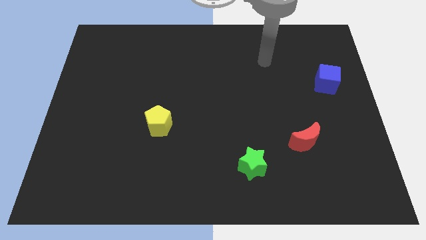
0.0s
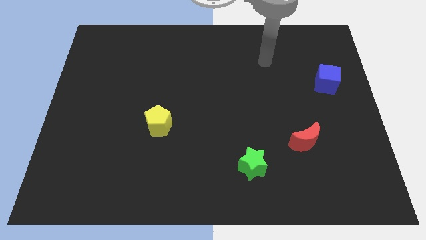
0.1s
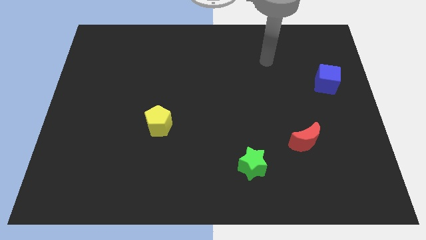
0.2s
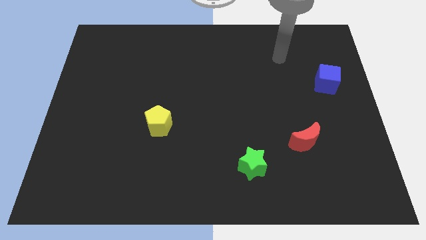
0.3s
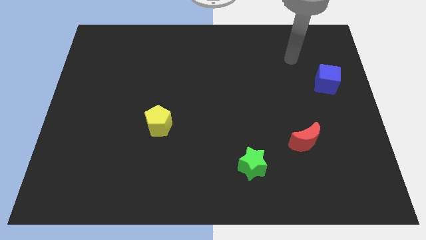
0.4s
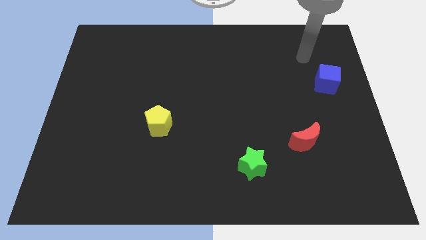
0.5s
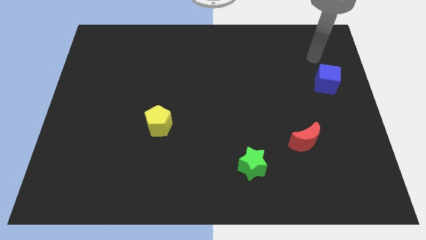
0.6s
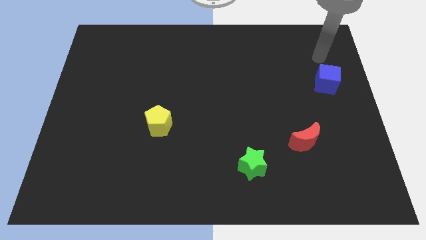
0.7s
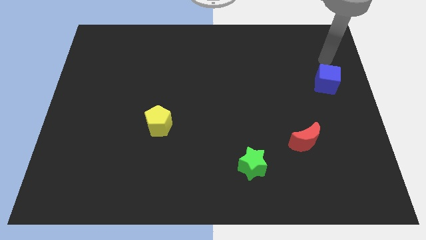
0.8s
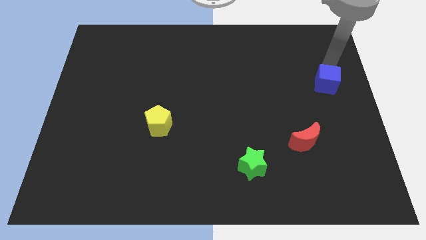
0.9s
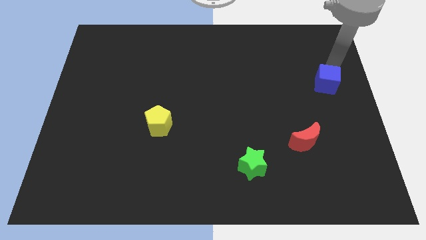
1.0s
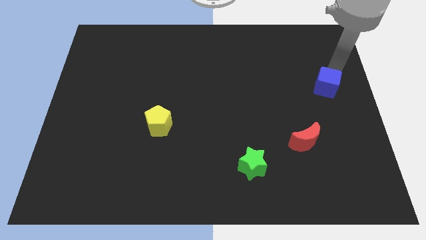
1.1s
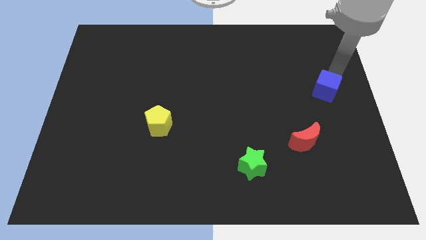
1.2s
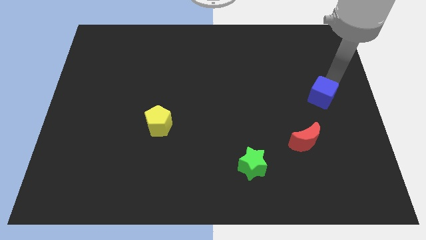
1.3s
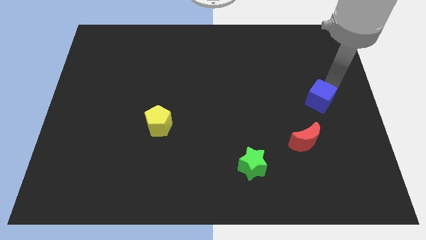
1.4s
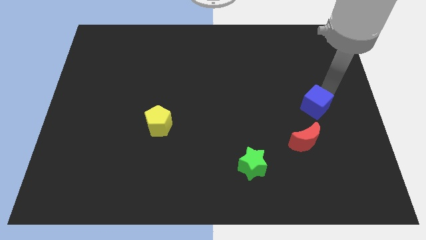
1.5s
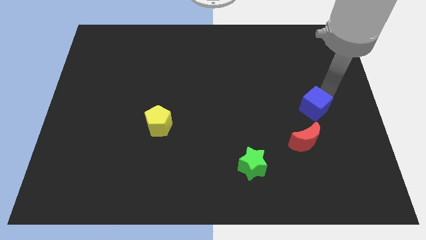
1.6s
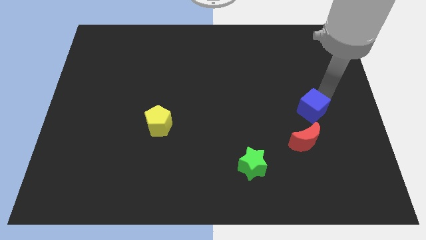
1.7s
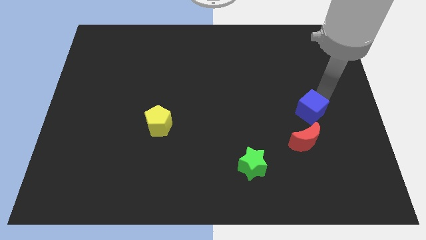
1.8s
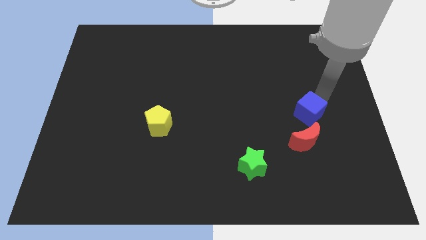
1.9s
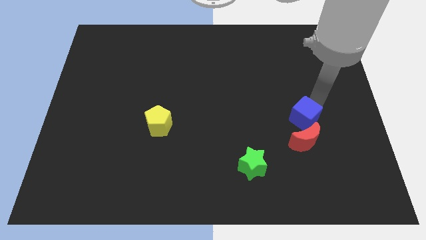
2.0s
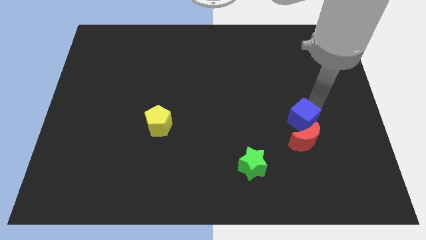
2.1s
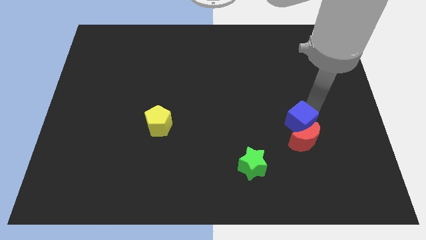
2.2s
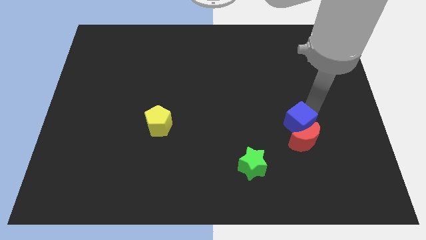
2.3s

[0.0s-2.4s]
push the blue block next to the moon

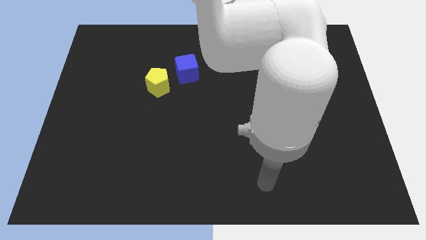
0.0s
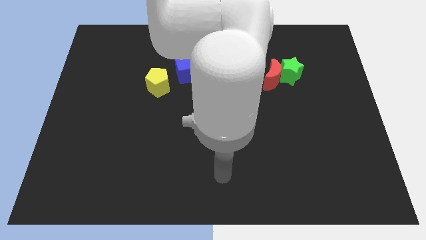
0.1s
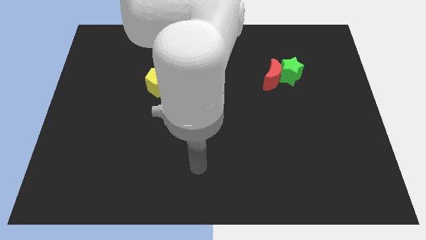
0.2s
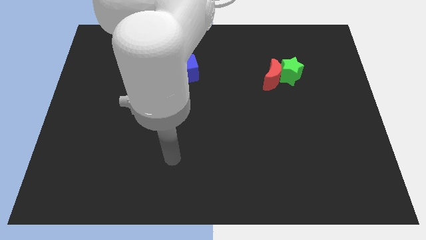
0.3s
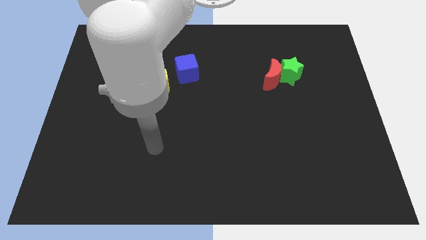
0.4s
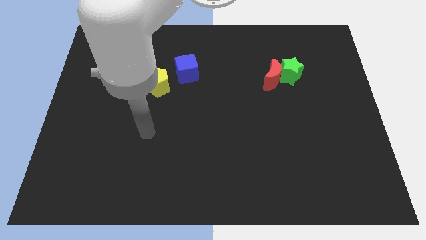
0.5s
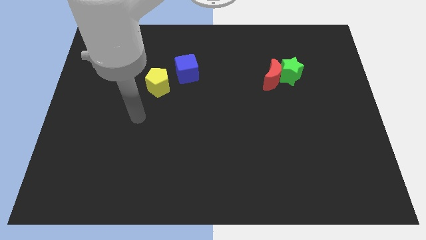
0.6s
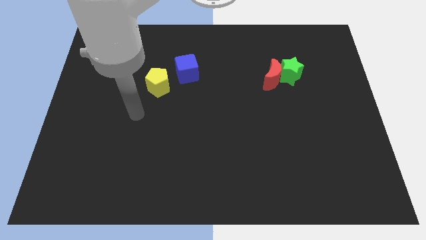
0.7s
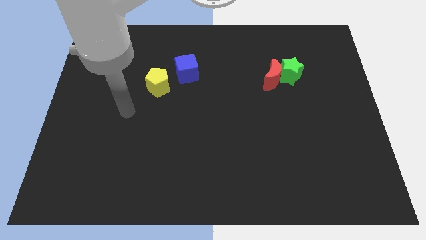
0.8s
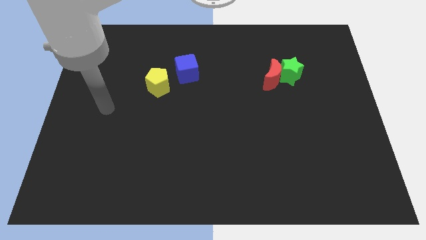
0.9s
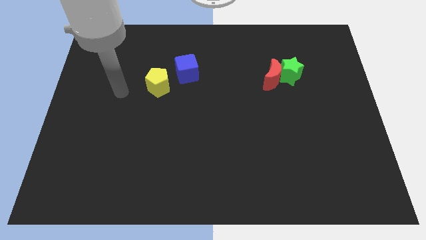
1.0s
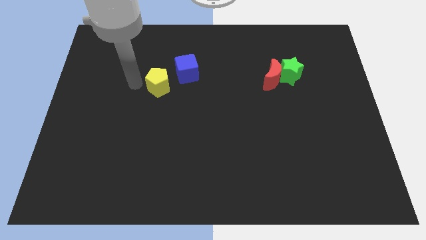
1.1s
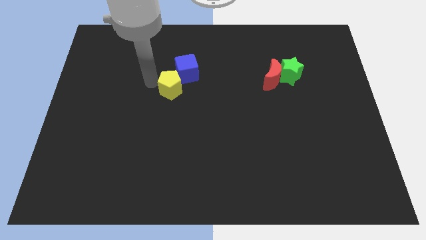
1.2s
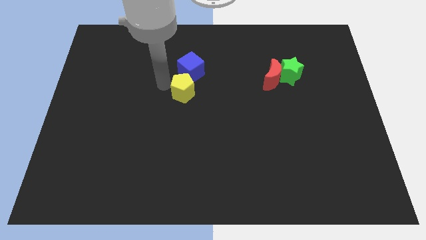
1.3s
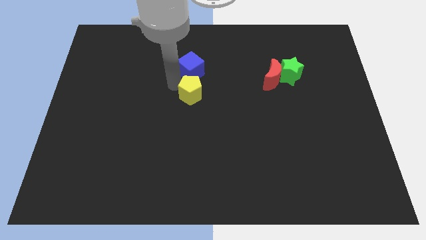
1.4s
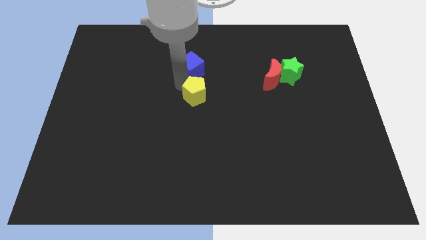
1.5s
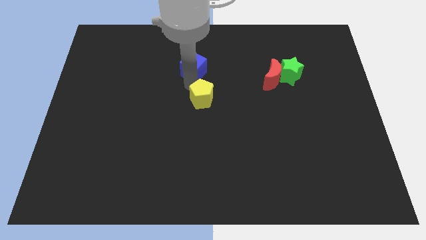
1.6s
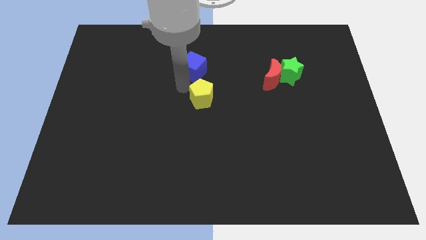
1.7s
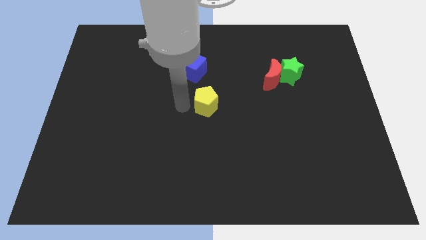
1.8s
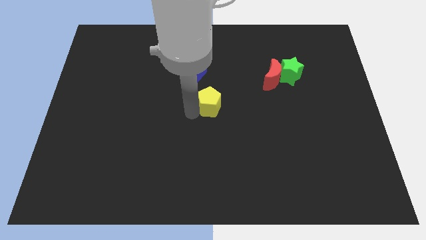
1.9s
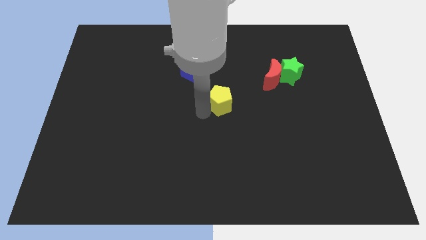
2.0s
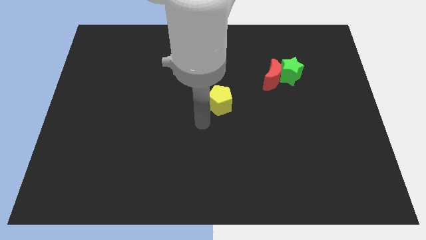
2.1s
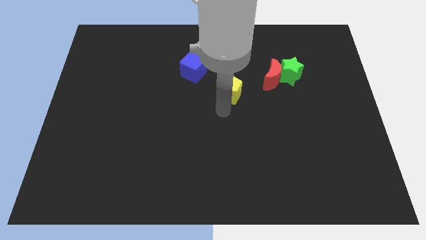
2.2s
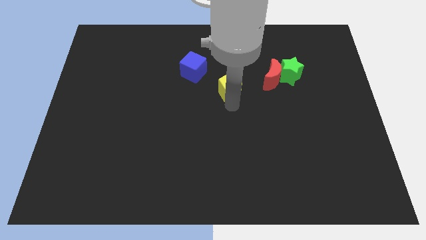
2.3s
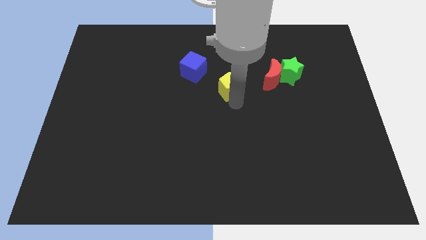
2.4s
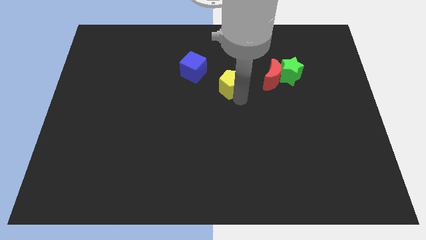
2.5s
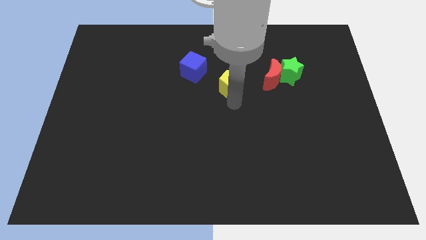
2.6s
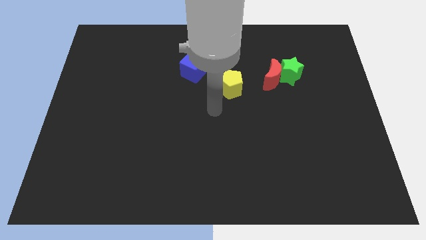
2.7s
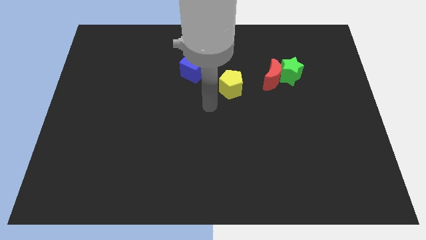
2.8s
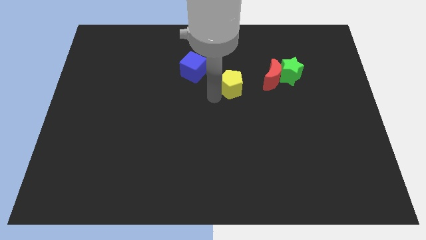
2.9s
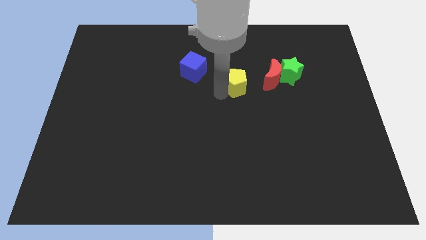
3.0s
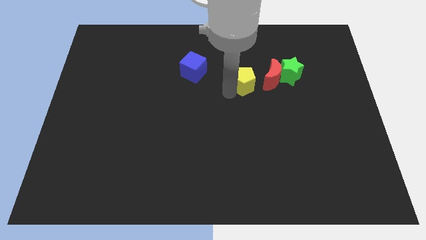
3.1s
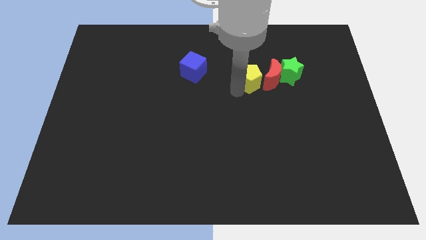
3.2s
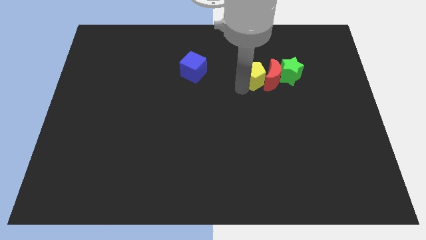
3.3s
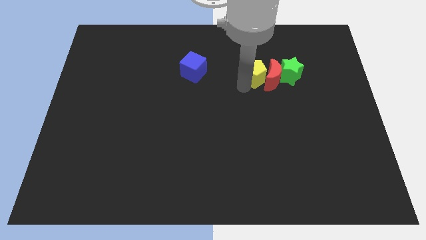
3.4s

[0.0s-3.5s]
slide the pentagon close to the moon

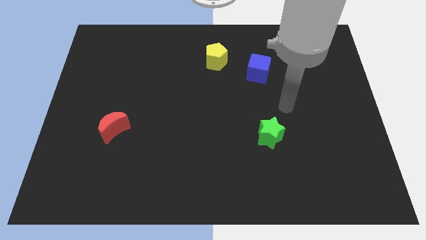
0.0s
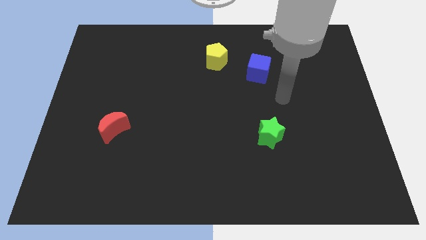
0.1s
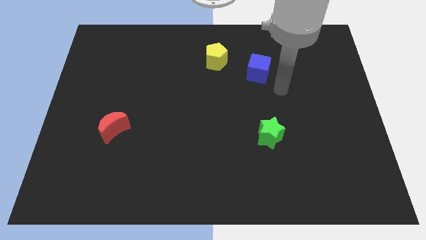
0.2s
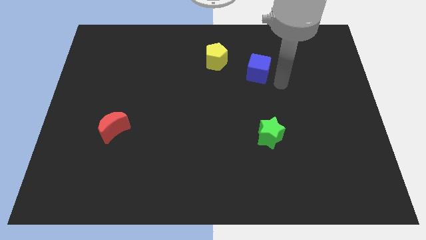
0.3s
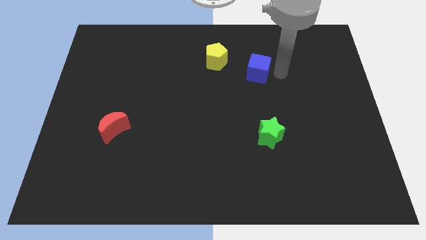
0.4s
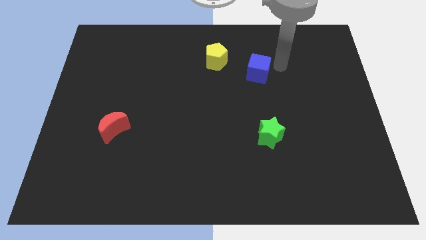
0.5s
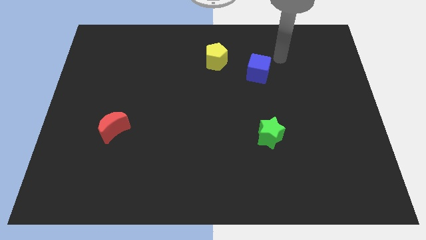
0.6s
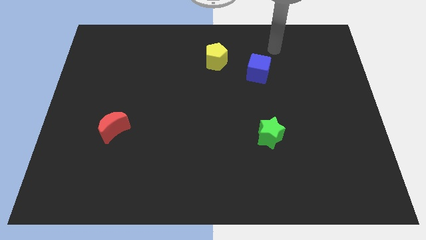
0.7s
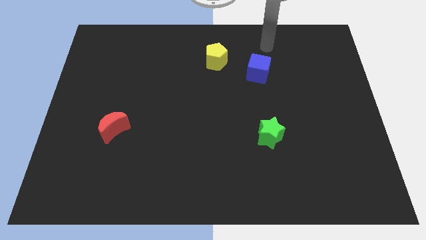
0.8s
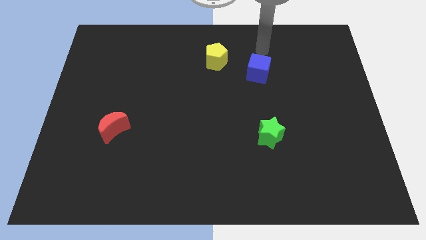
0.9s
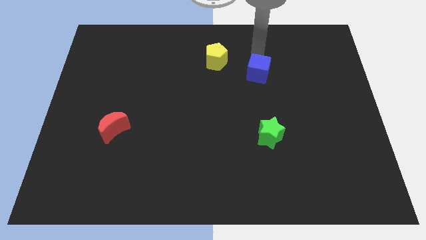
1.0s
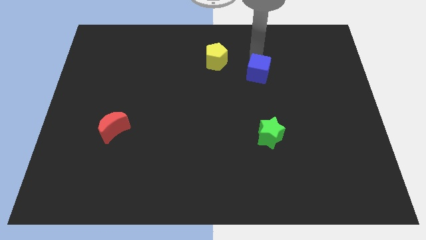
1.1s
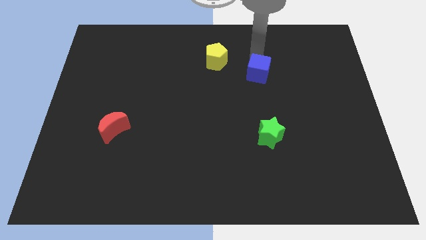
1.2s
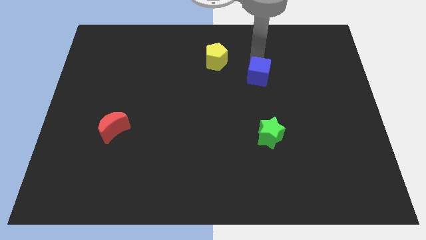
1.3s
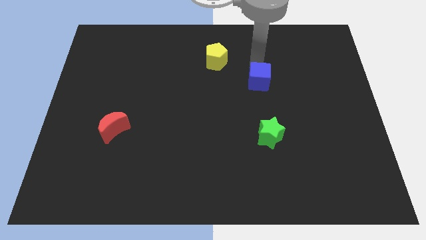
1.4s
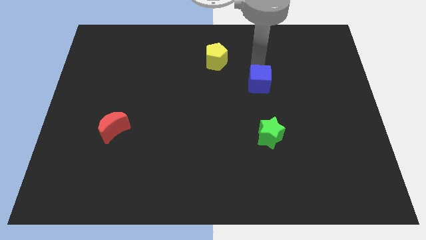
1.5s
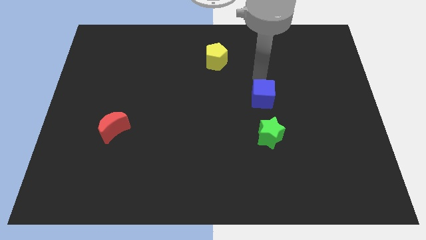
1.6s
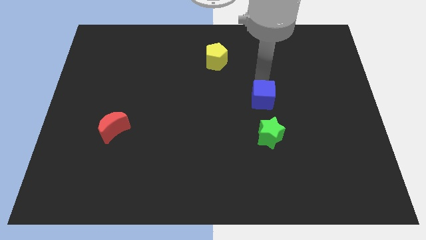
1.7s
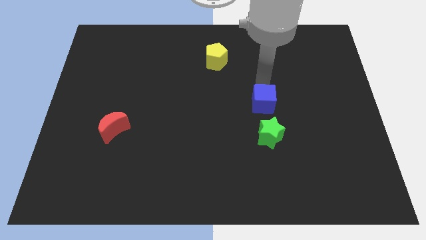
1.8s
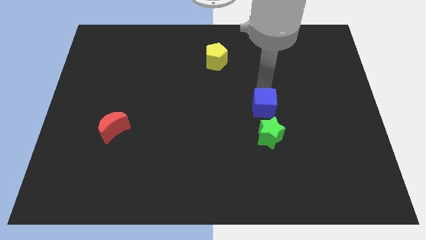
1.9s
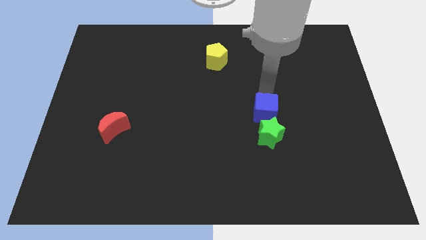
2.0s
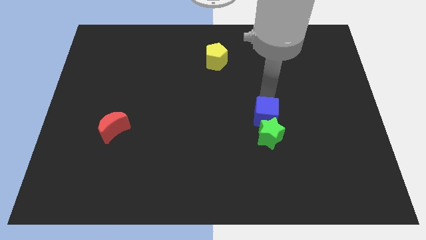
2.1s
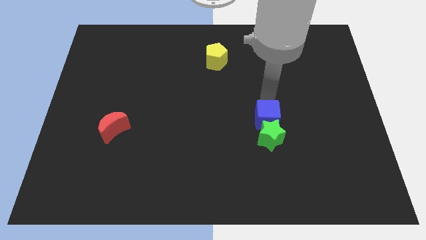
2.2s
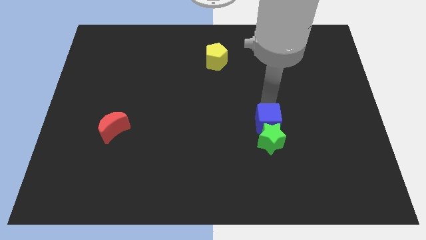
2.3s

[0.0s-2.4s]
push the blue cube close to the green star
